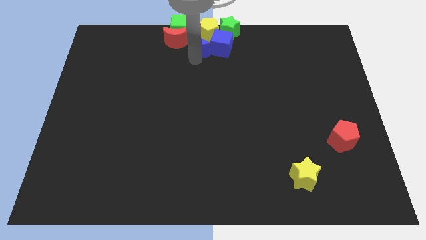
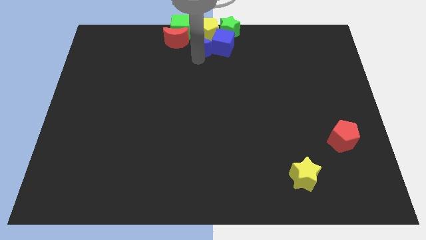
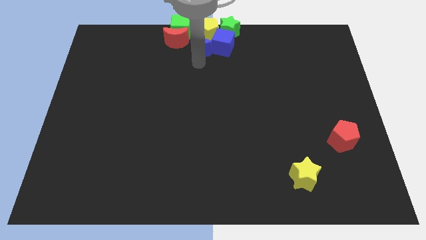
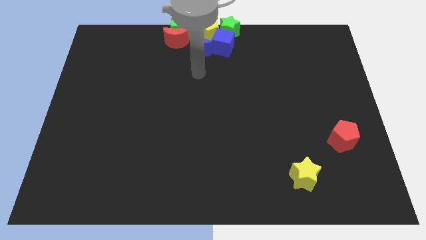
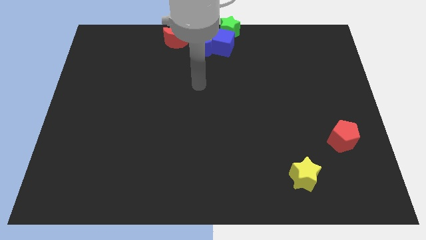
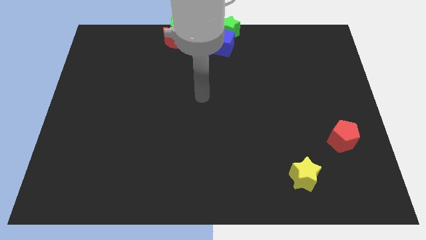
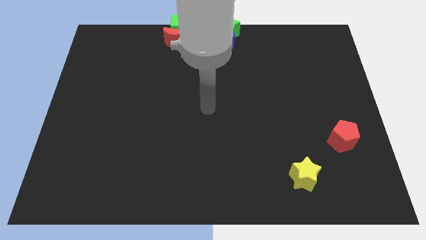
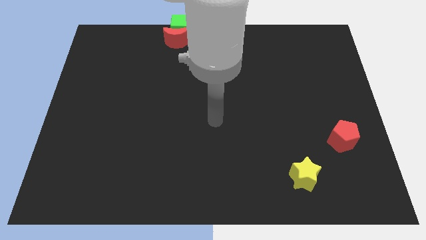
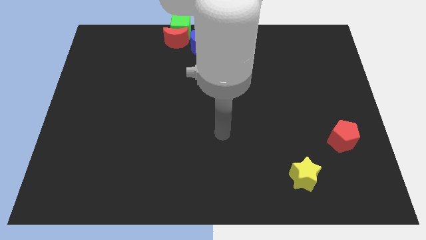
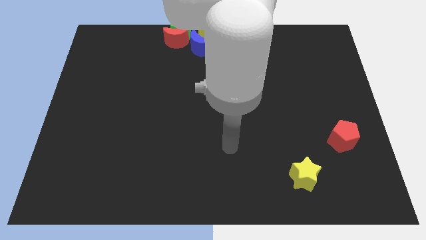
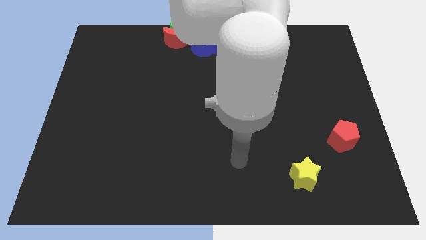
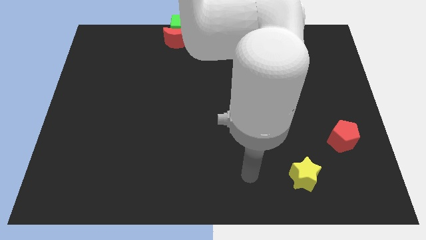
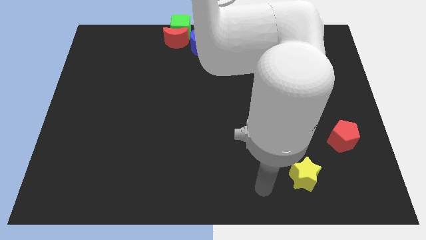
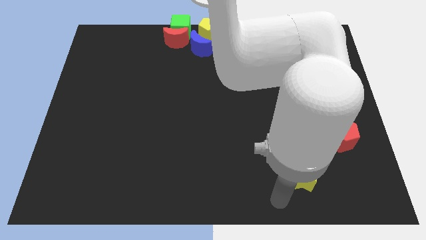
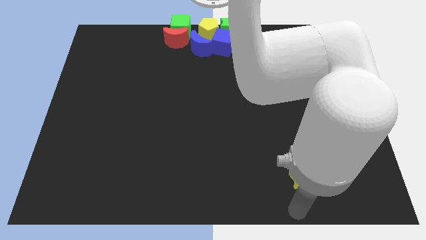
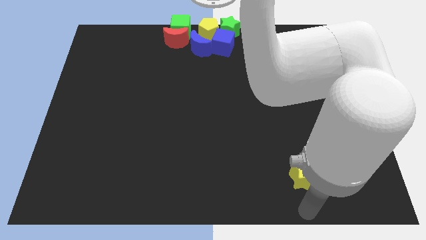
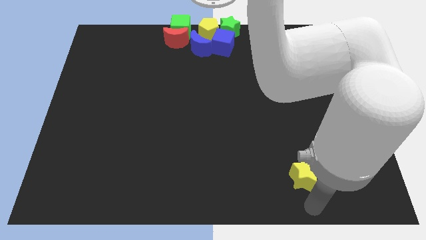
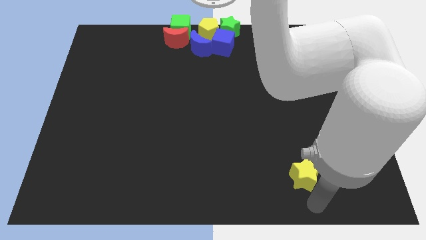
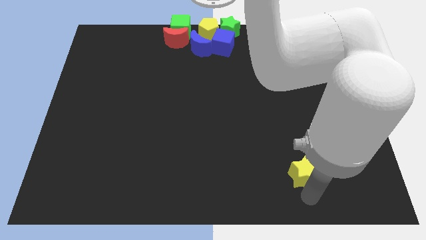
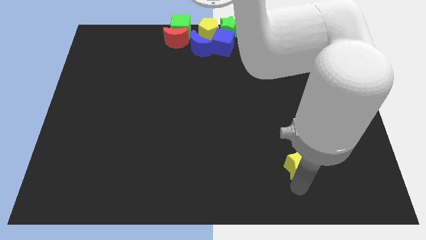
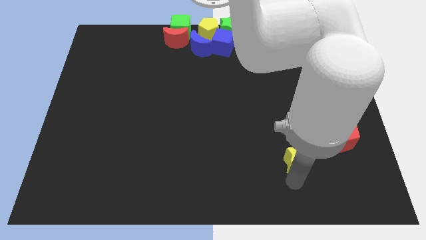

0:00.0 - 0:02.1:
place your arm below yellow star

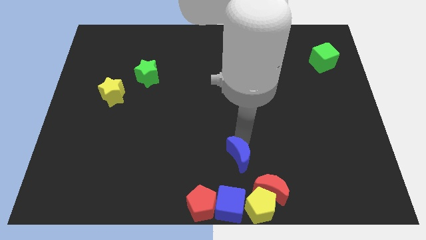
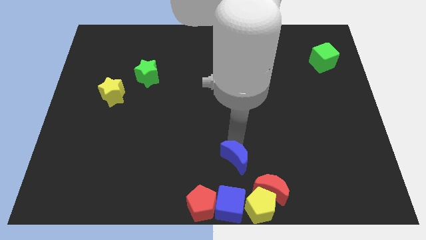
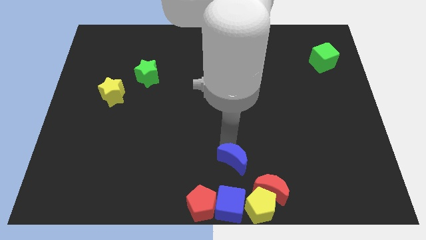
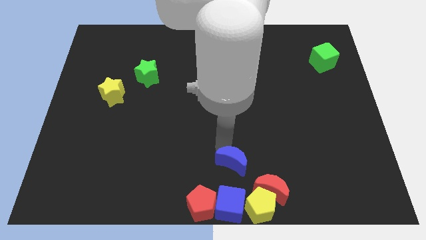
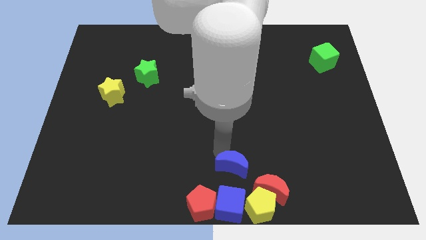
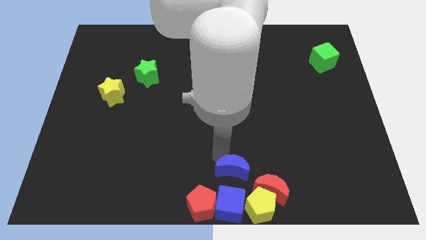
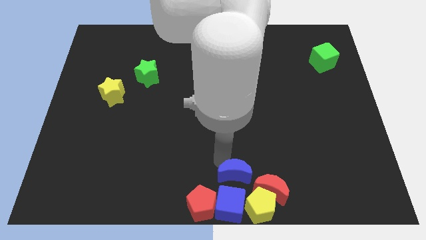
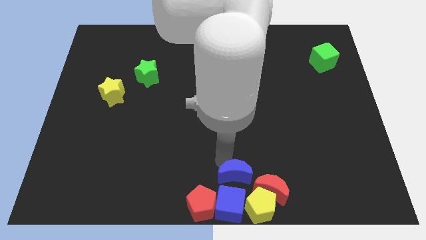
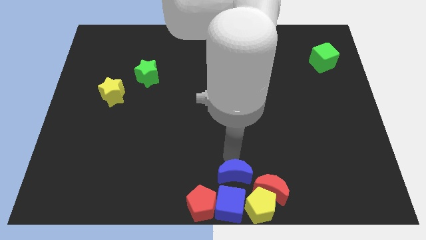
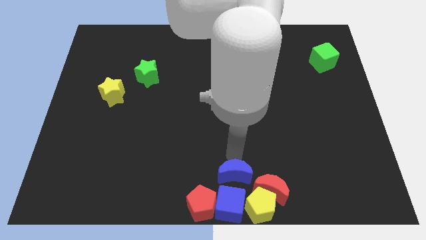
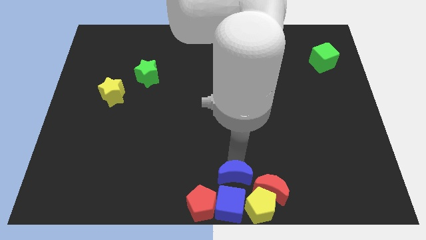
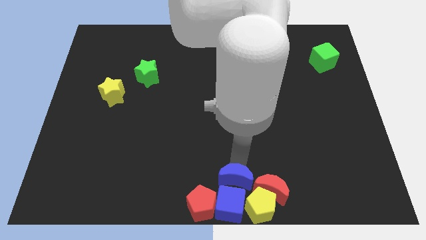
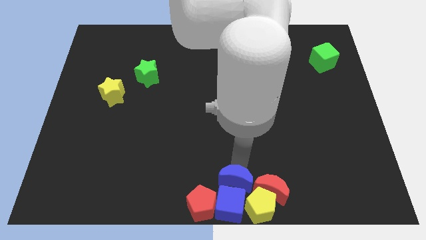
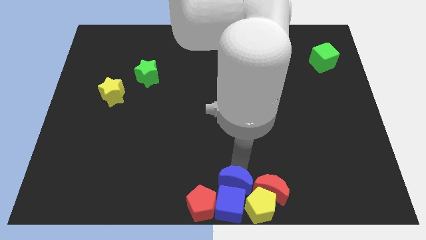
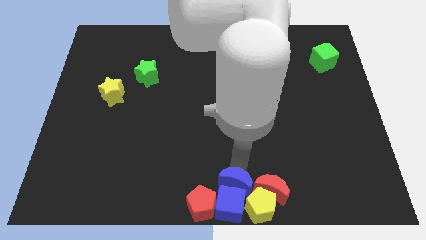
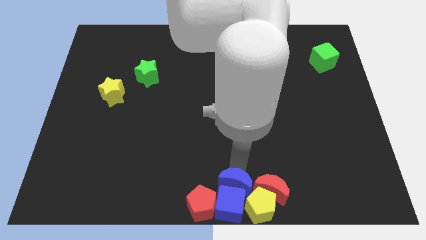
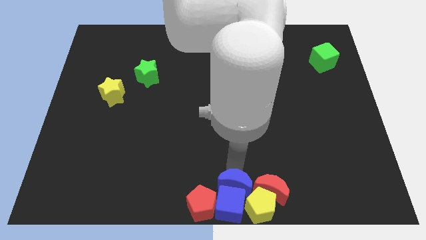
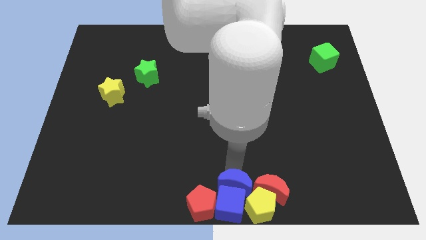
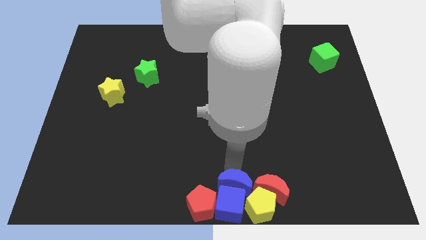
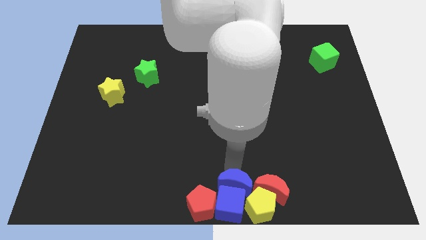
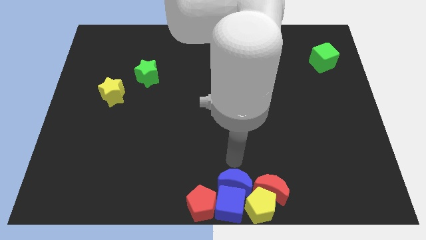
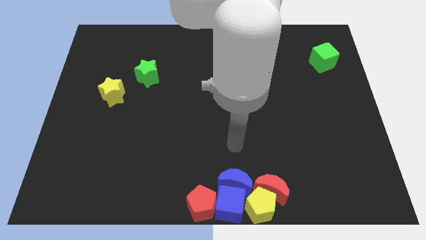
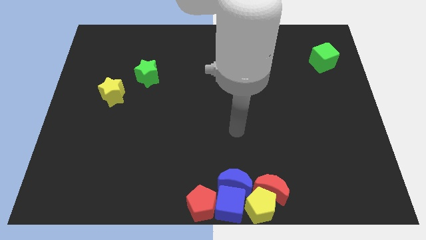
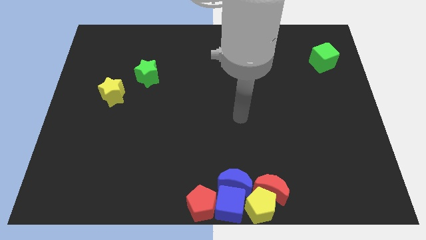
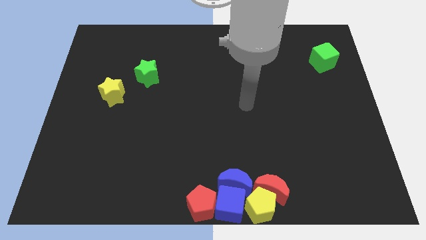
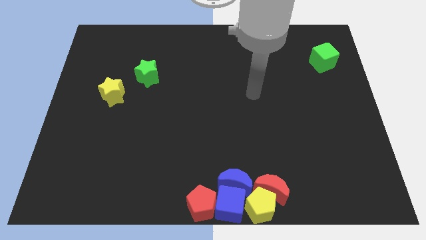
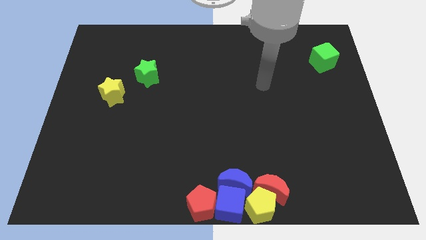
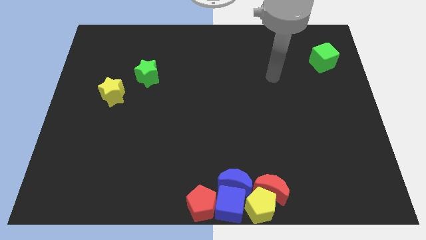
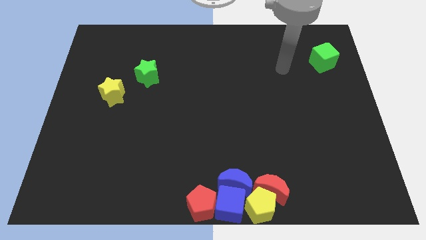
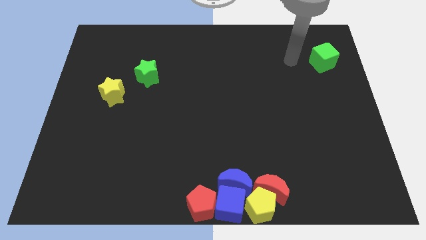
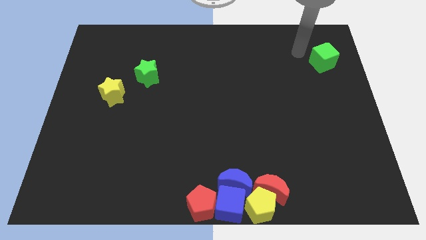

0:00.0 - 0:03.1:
slide the blue moon into the blue cube

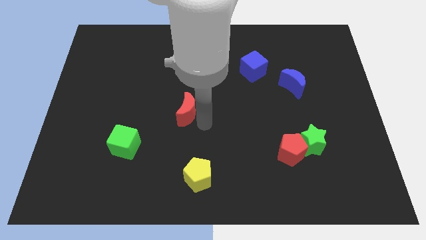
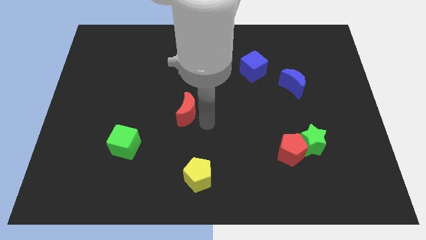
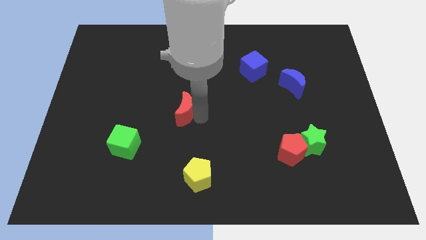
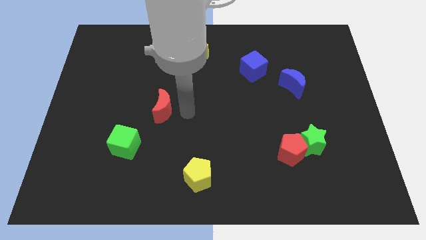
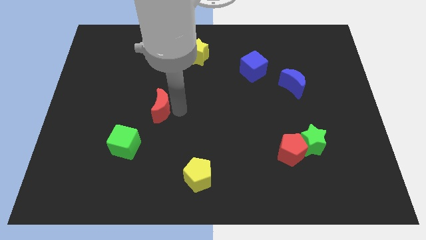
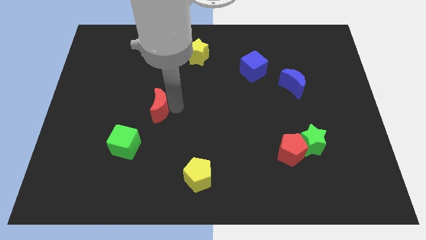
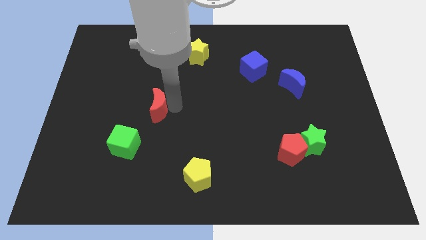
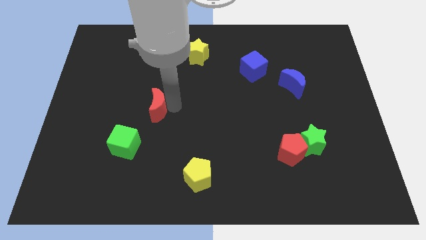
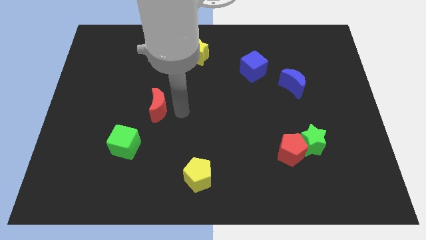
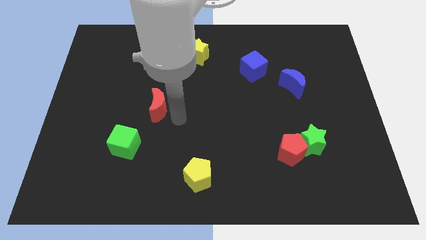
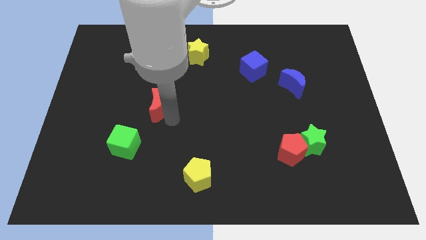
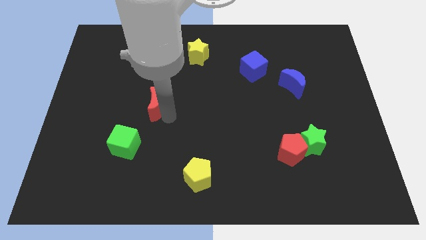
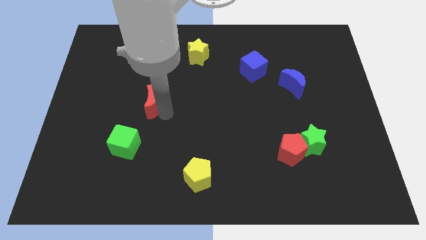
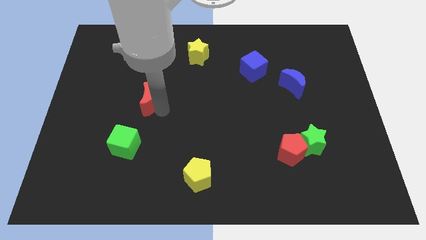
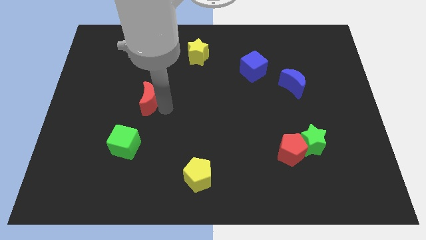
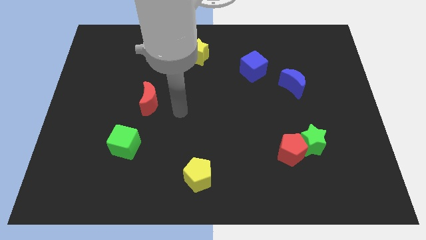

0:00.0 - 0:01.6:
place the red moon above the green cube

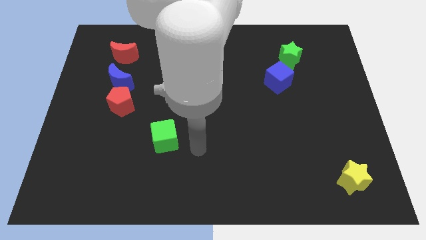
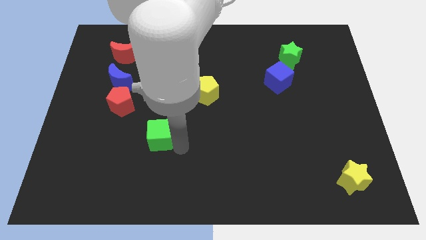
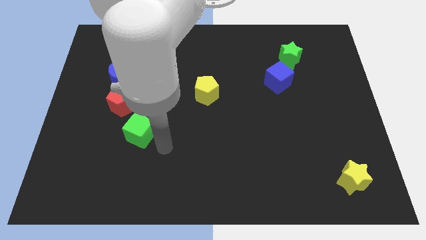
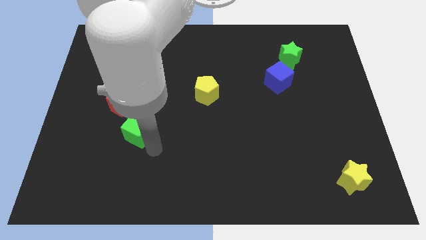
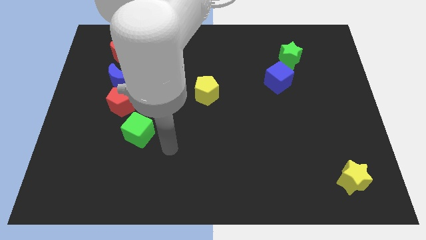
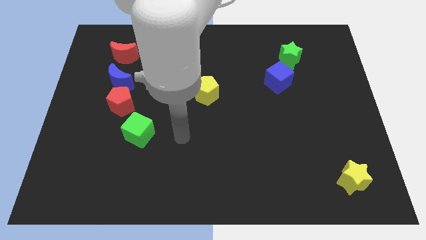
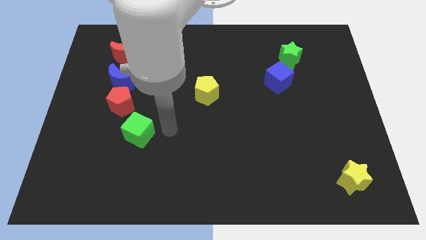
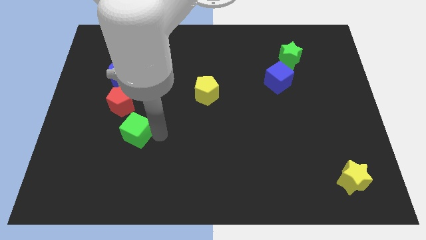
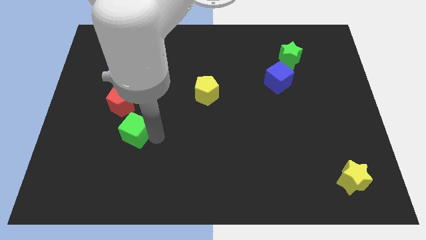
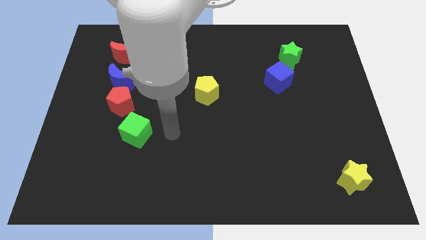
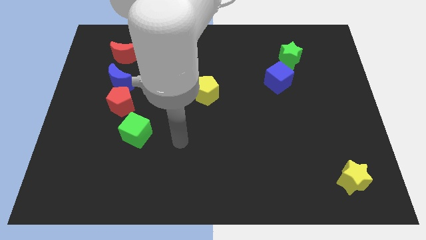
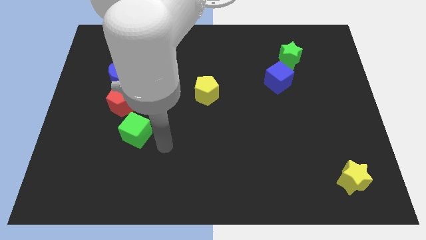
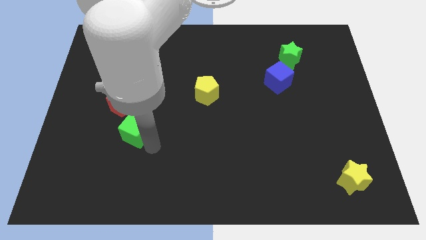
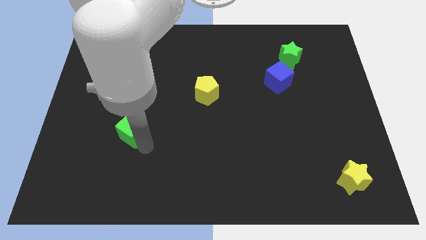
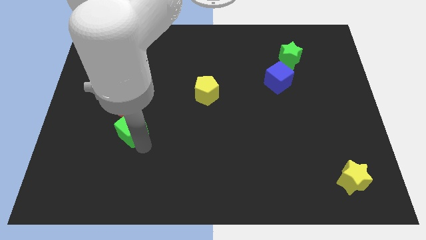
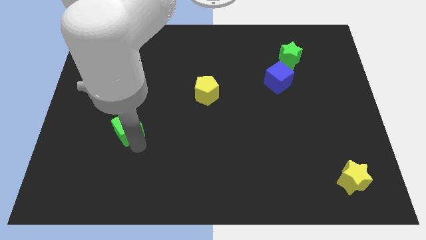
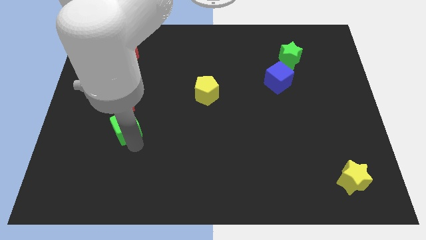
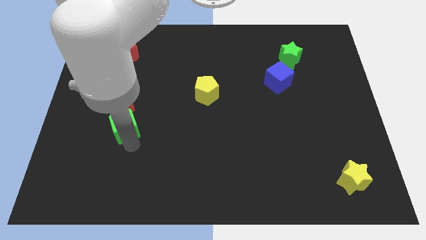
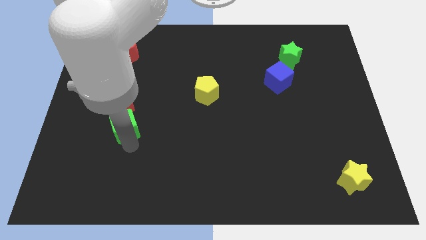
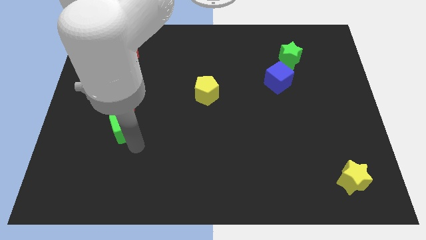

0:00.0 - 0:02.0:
move the green cube close to the red pentagon
